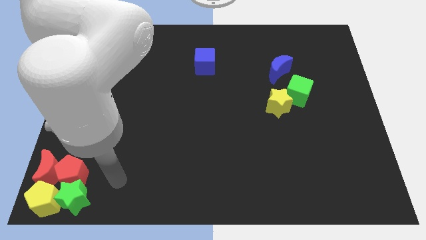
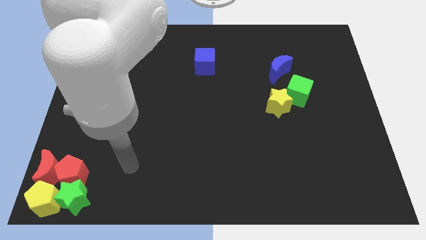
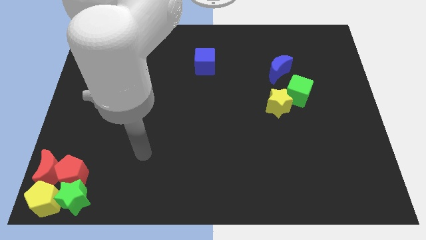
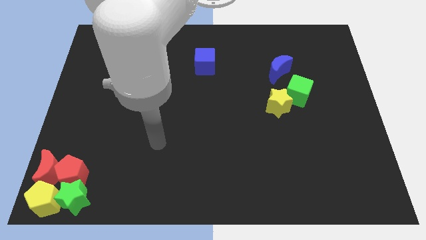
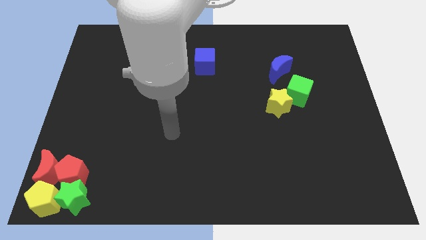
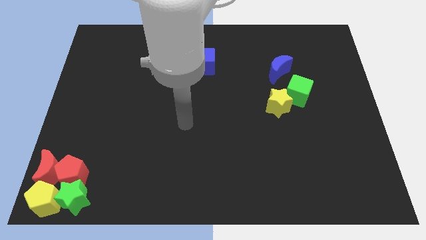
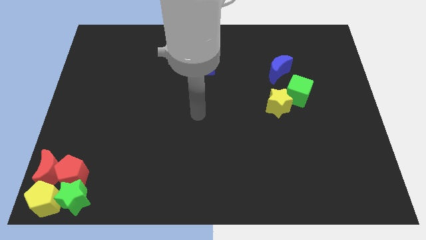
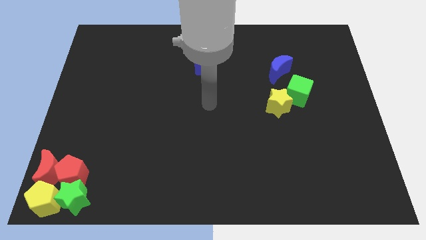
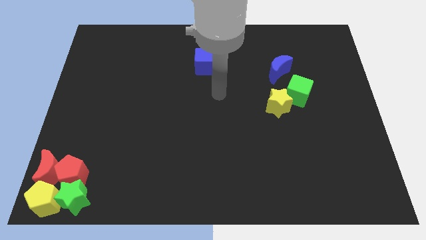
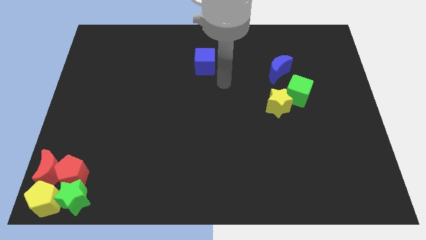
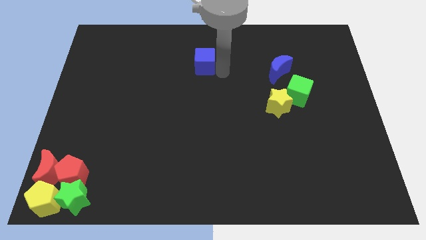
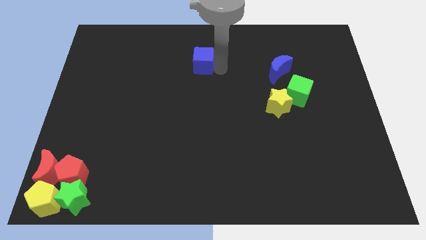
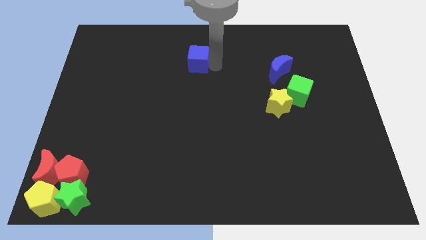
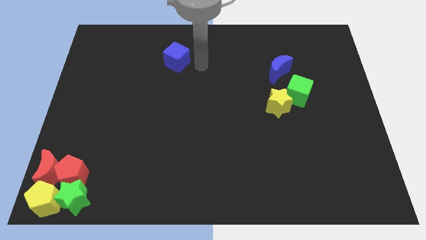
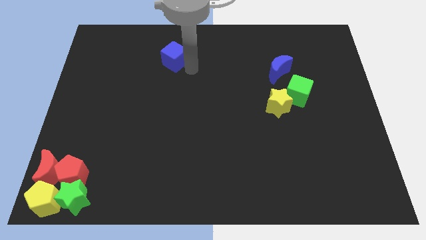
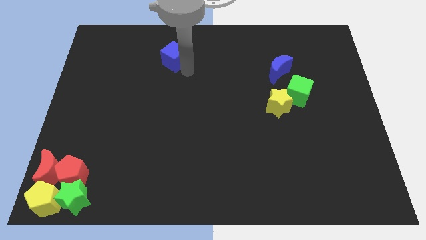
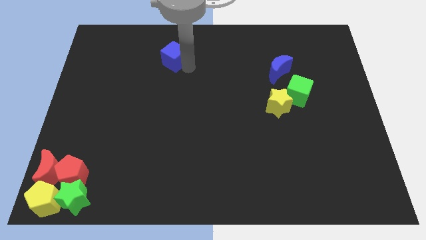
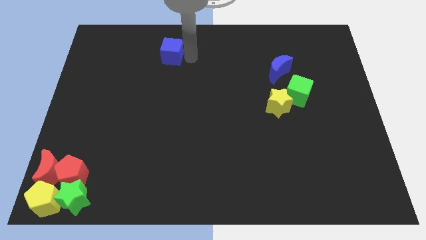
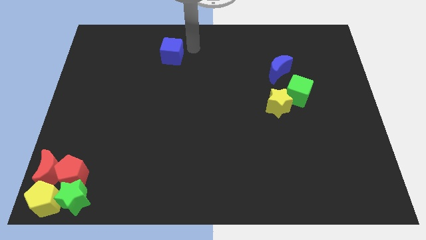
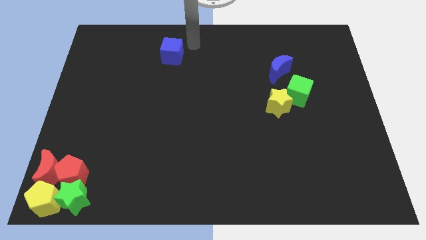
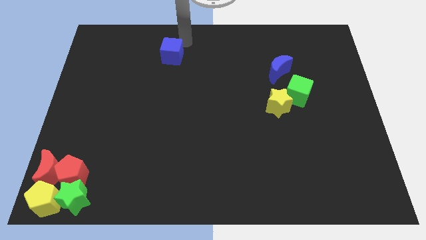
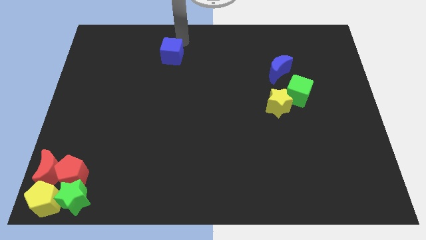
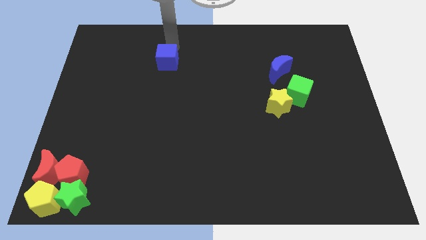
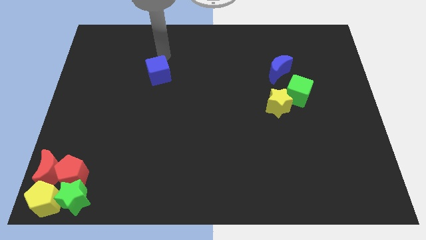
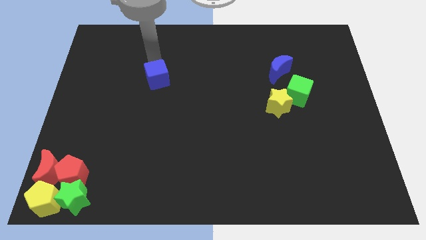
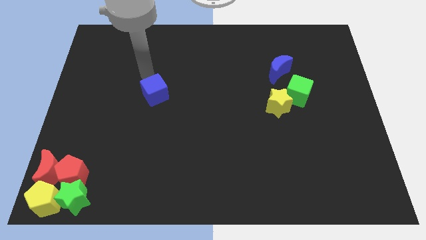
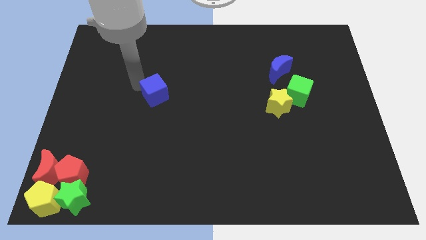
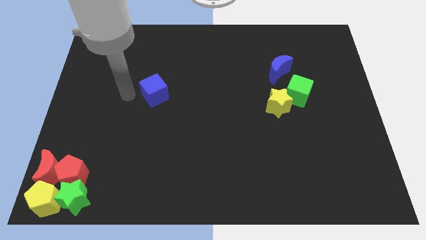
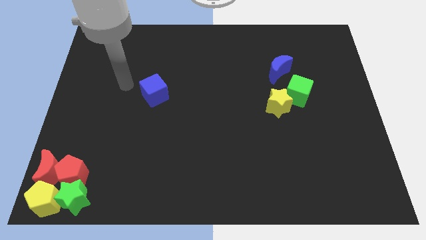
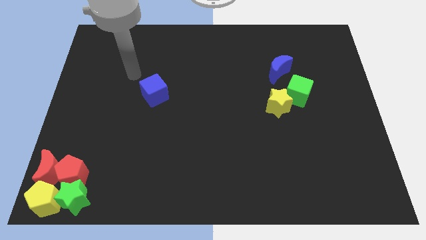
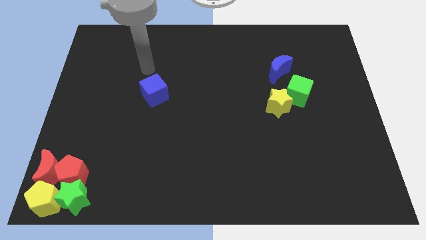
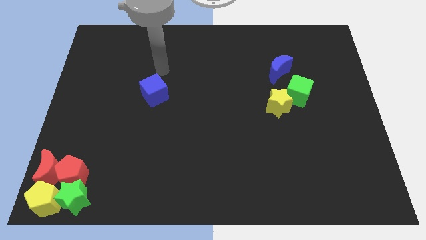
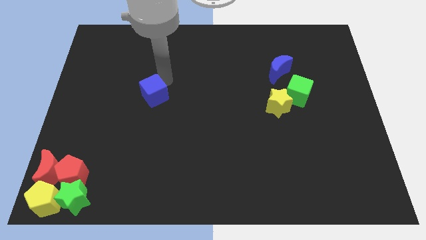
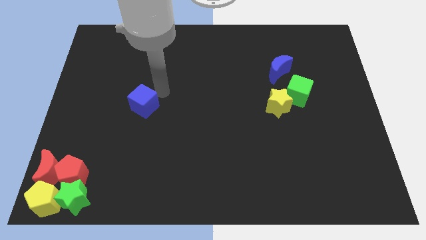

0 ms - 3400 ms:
move the blue cube towards red pentagon

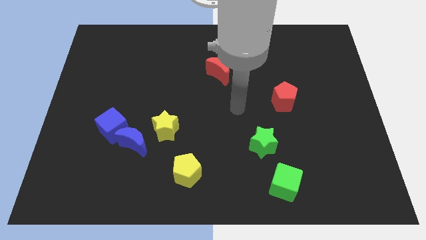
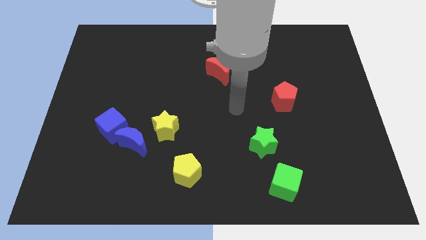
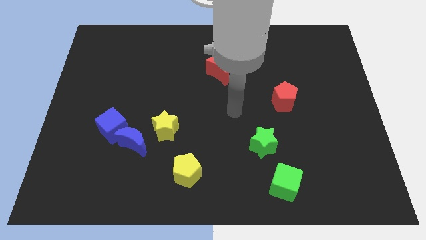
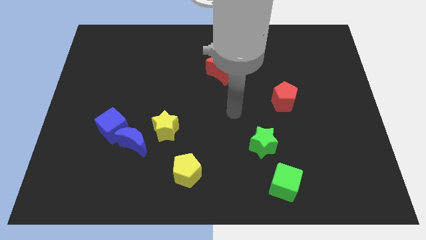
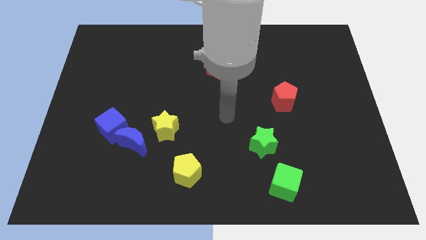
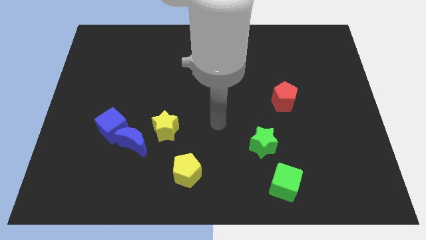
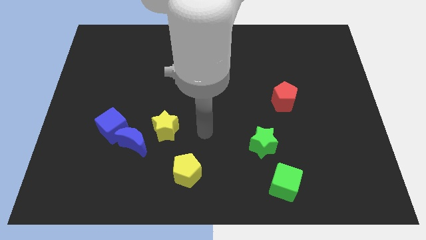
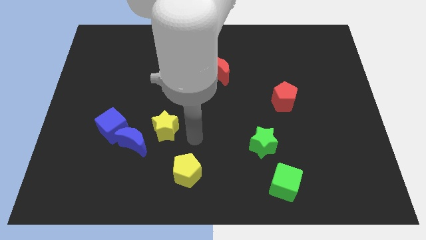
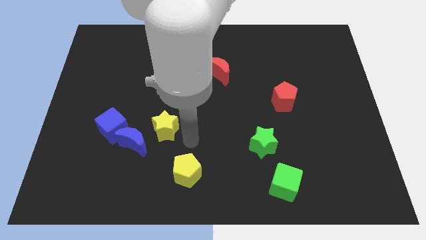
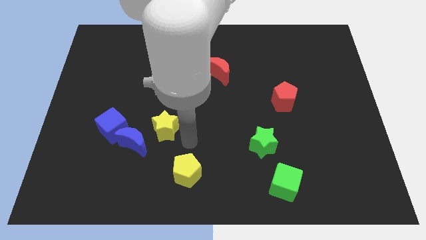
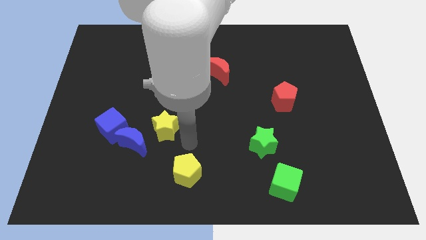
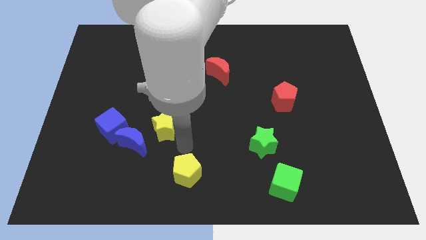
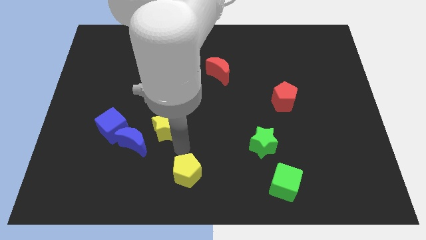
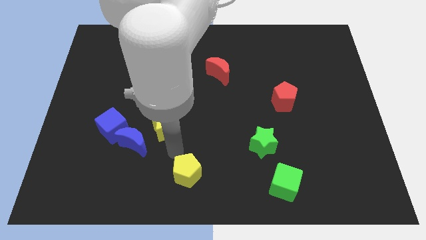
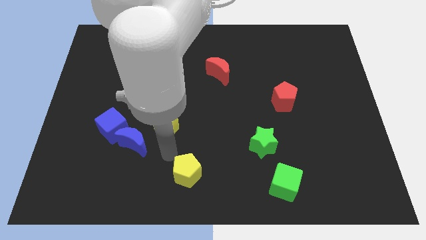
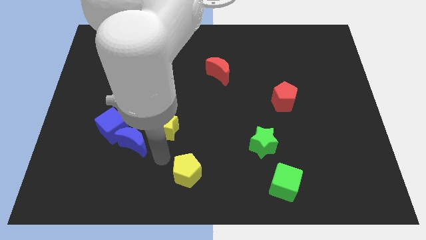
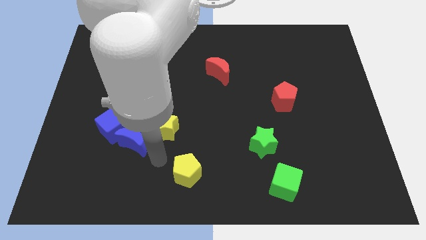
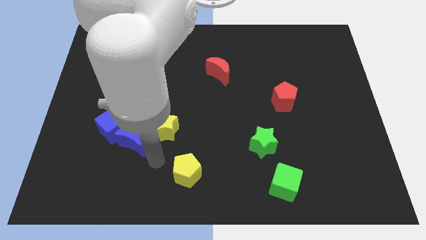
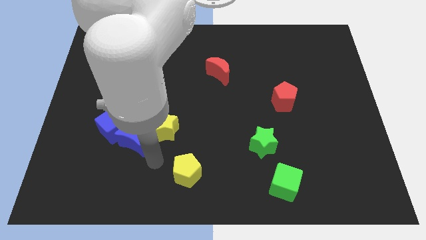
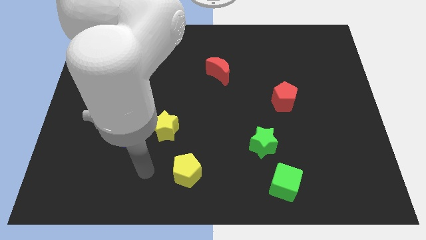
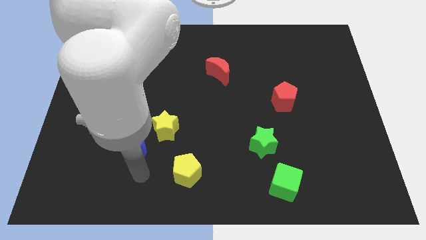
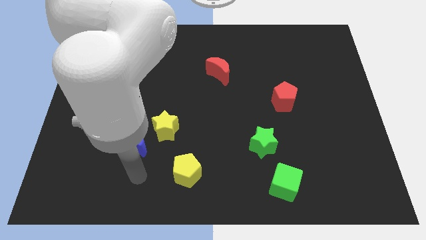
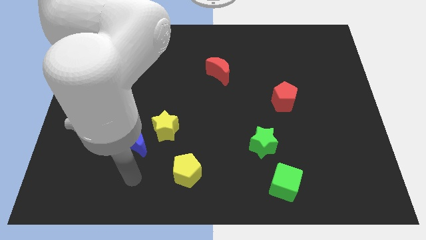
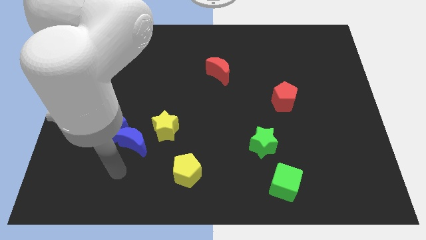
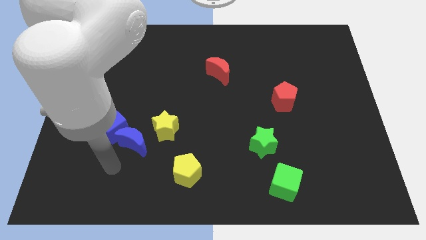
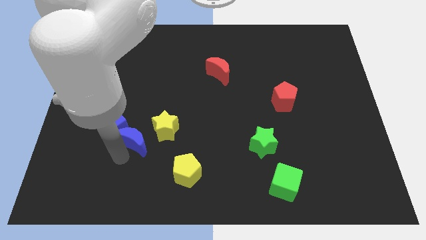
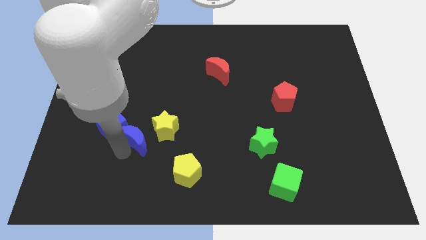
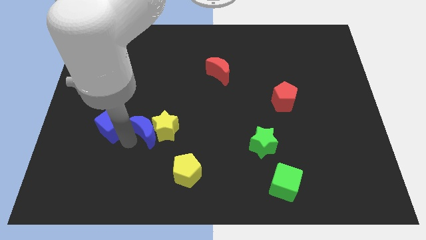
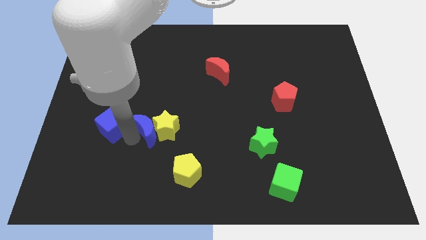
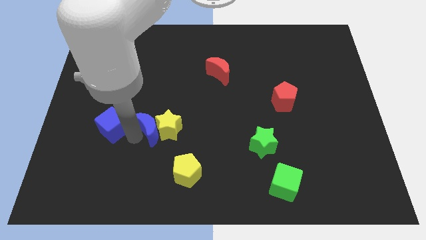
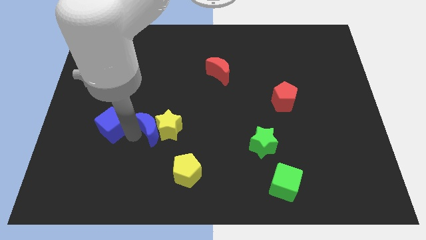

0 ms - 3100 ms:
move the blue crescent into the left side of the yellow star

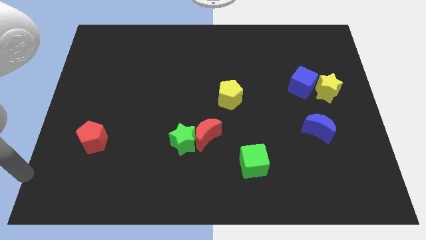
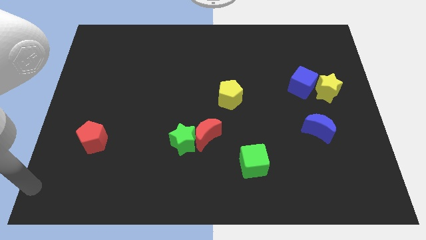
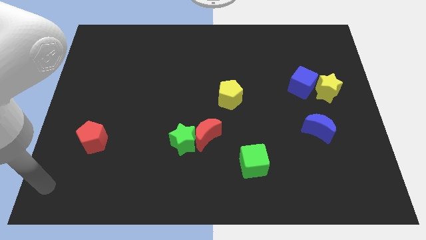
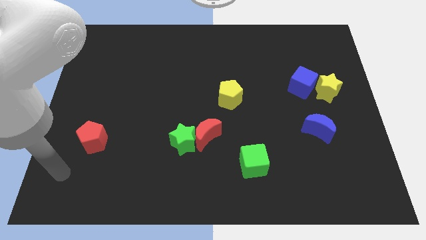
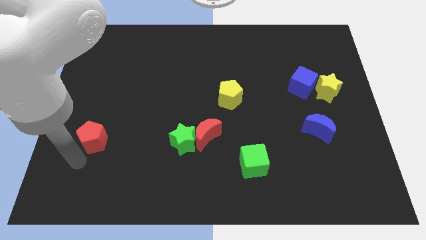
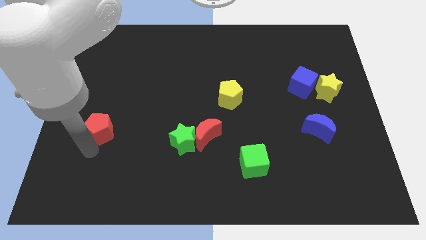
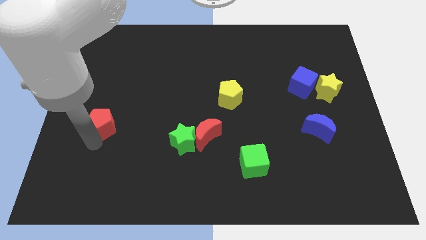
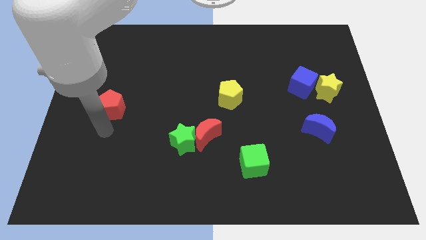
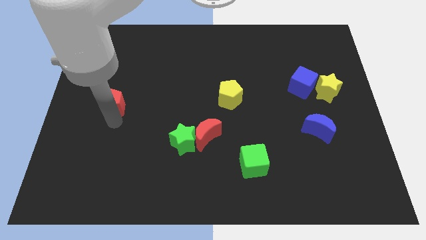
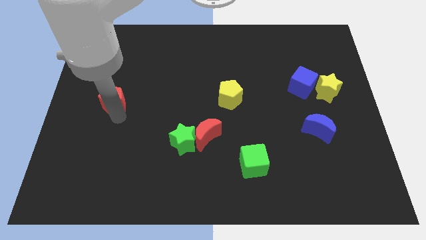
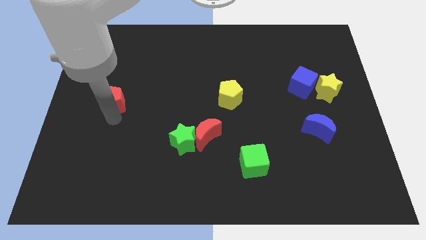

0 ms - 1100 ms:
move the red pentagon slightly upwards

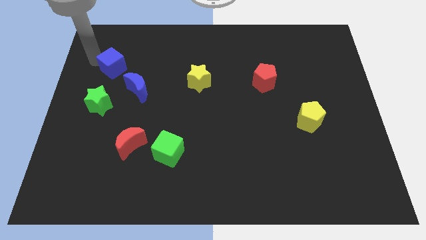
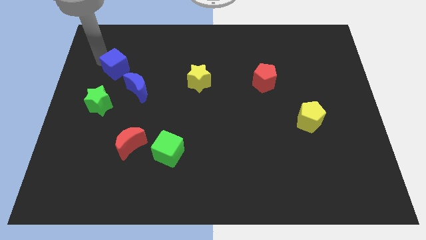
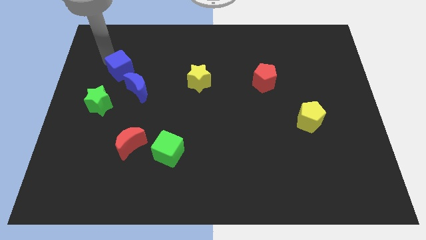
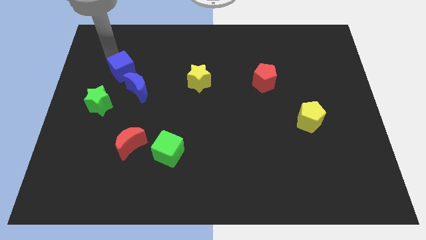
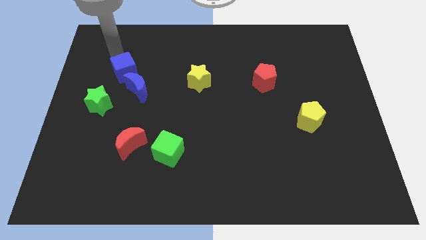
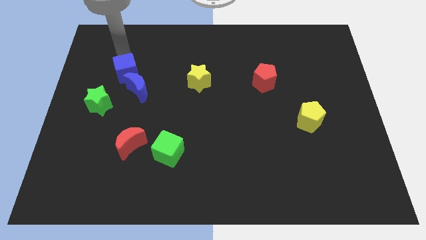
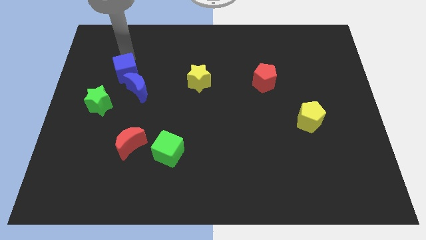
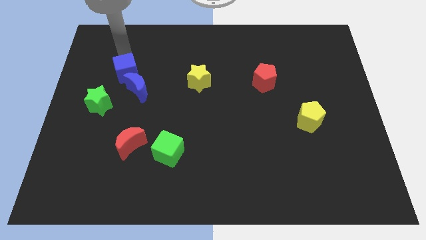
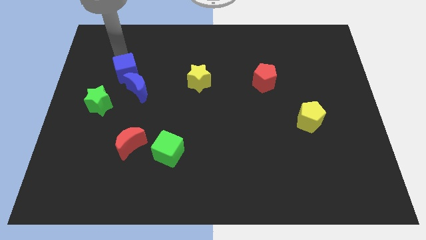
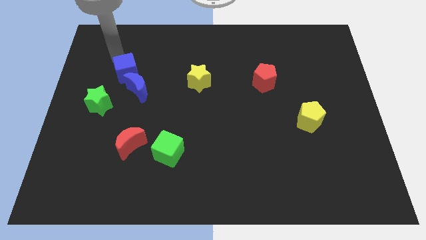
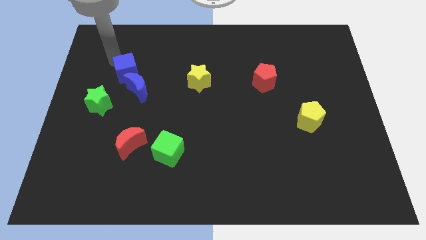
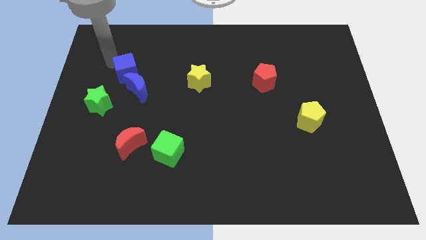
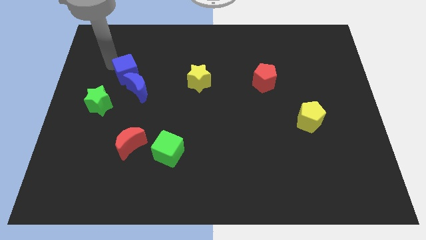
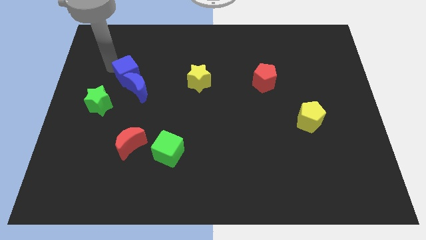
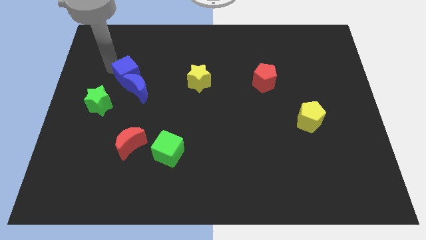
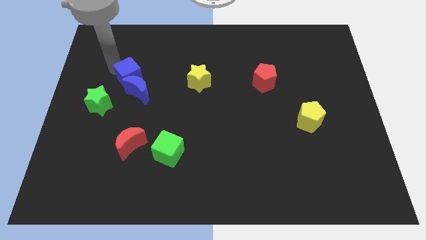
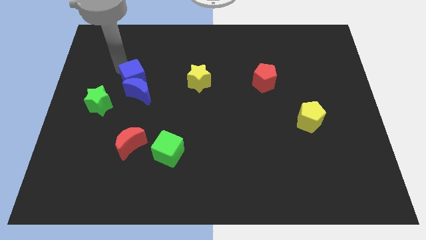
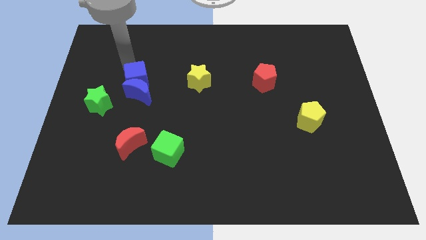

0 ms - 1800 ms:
push the blue cube into the blue moon
